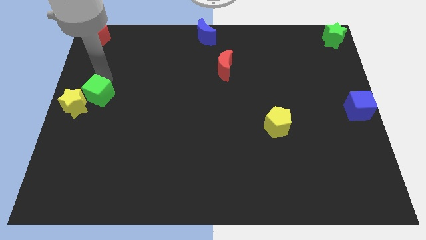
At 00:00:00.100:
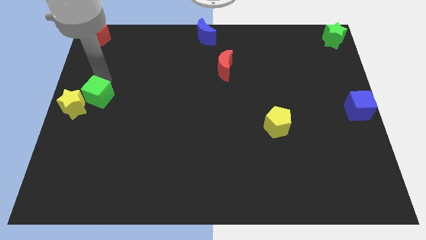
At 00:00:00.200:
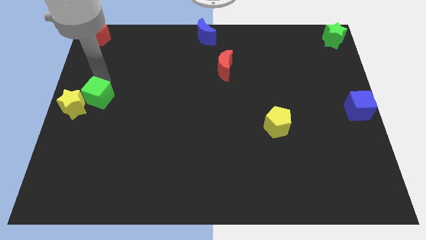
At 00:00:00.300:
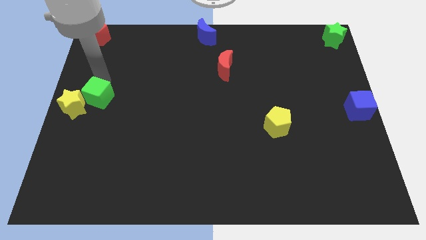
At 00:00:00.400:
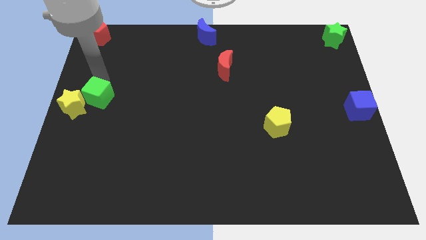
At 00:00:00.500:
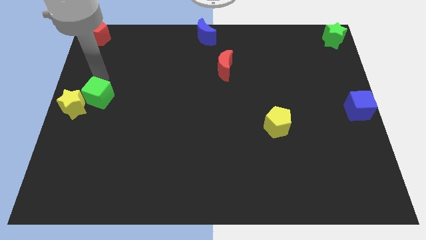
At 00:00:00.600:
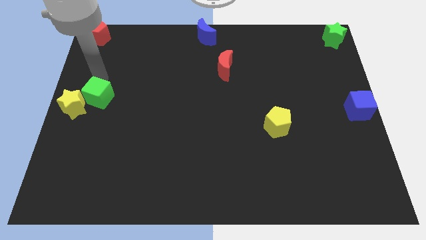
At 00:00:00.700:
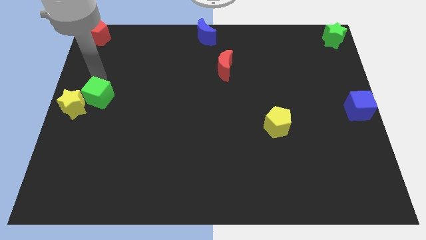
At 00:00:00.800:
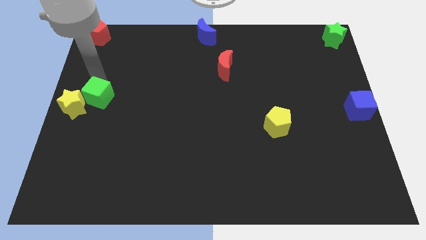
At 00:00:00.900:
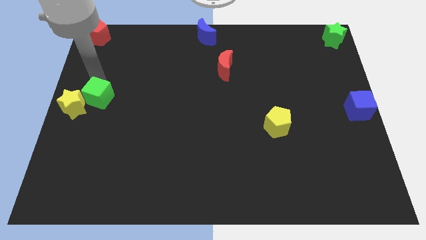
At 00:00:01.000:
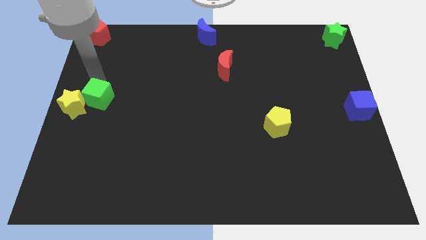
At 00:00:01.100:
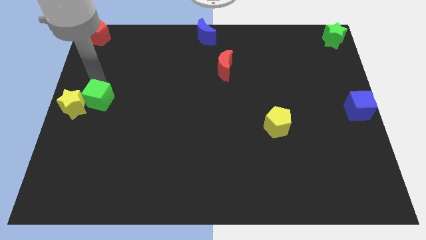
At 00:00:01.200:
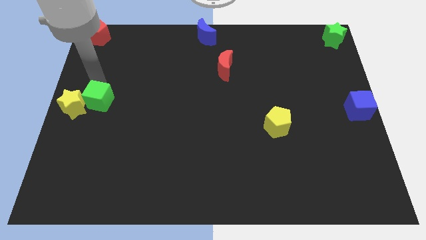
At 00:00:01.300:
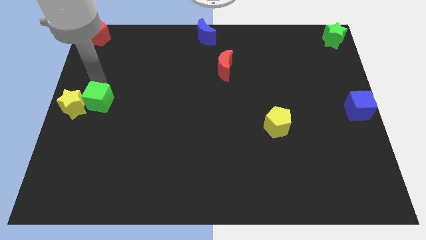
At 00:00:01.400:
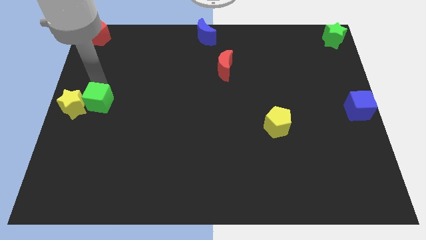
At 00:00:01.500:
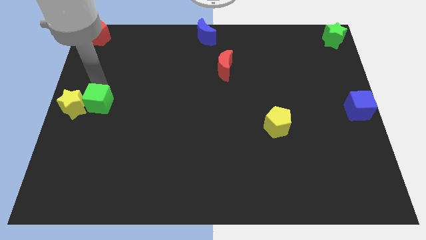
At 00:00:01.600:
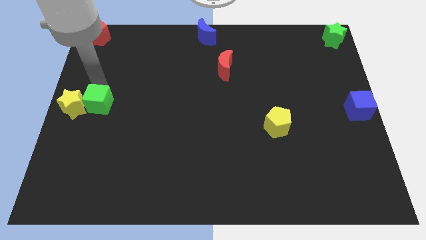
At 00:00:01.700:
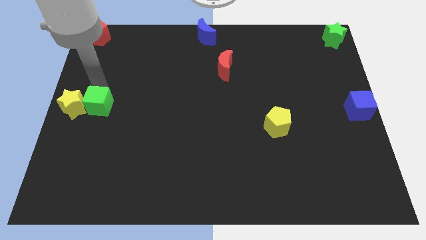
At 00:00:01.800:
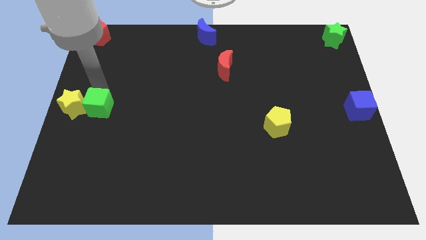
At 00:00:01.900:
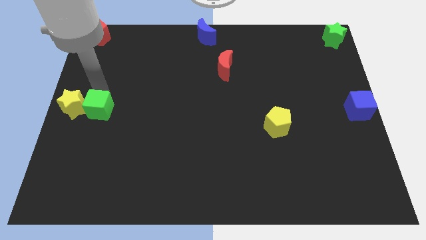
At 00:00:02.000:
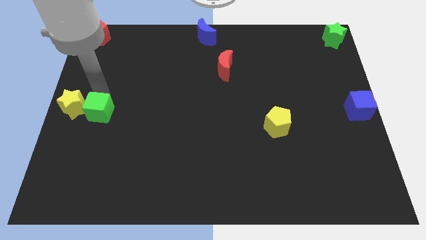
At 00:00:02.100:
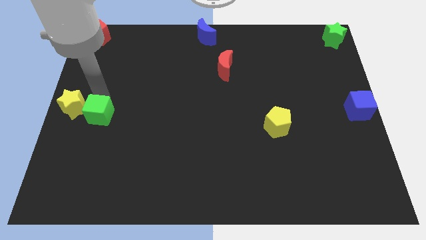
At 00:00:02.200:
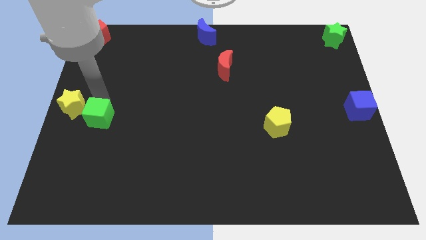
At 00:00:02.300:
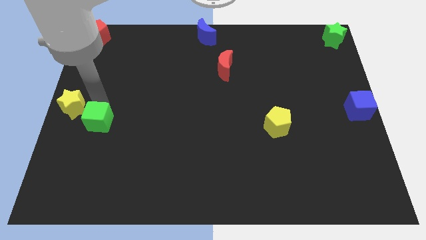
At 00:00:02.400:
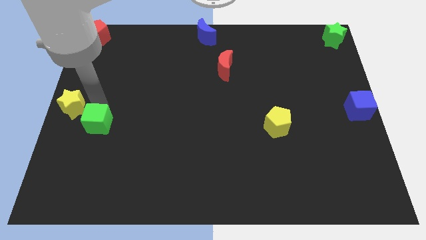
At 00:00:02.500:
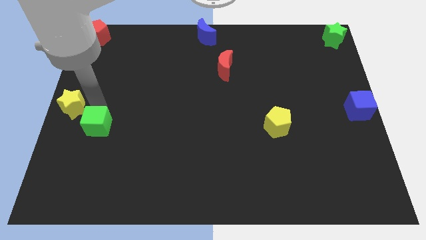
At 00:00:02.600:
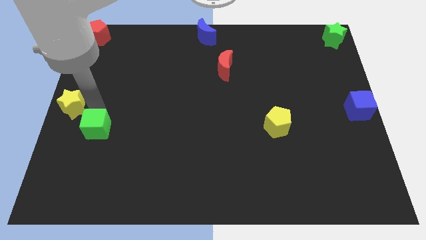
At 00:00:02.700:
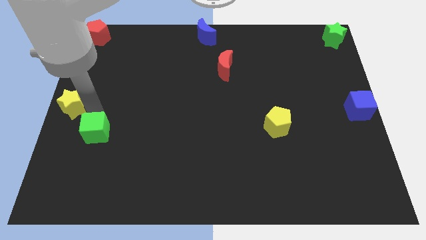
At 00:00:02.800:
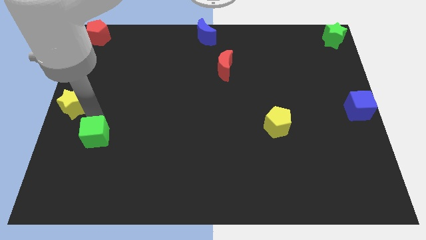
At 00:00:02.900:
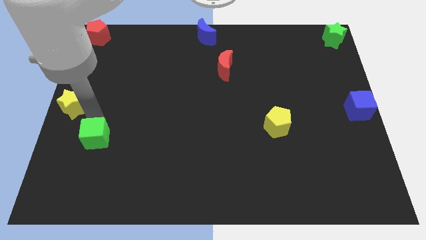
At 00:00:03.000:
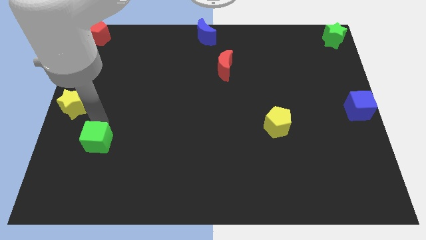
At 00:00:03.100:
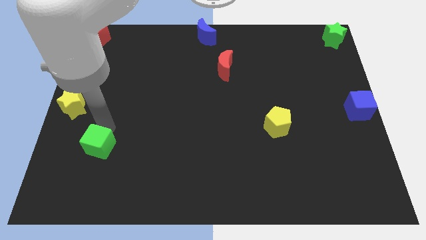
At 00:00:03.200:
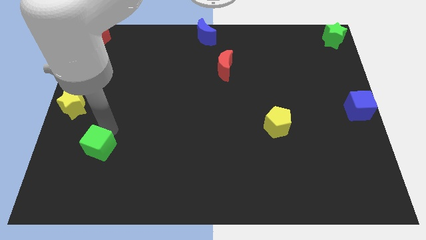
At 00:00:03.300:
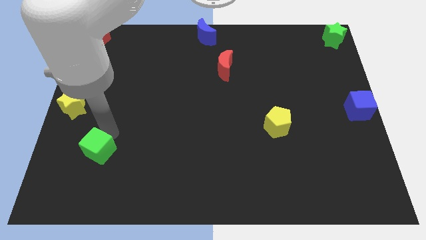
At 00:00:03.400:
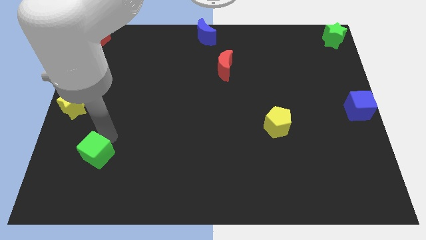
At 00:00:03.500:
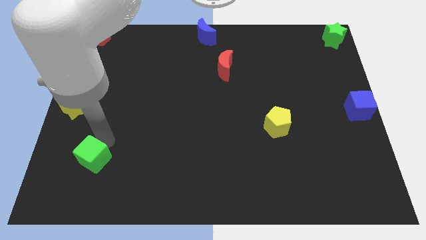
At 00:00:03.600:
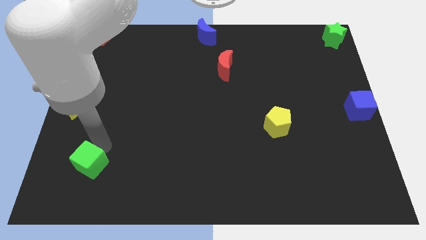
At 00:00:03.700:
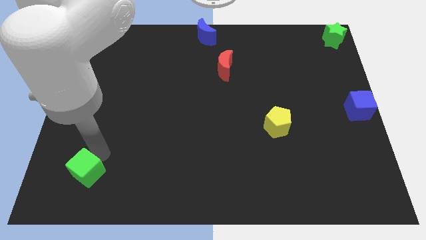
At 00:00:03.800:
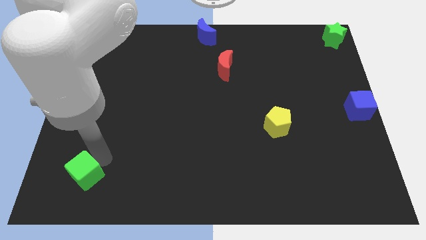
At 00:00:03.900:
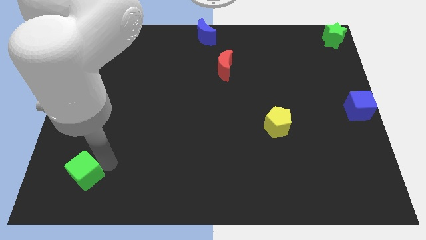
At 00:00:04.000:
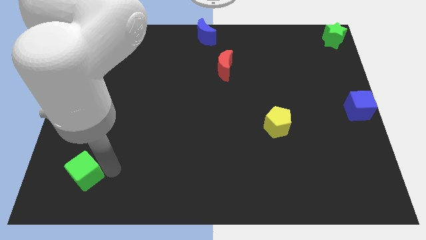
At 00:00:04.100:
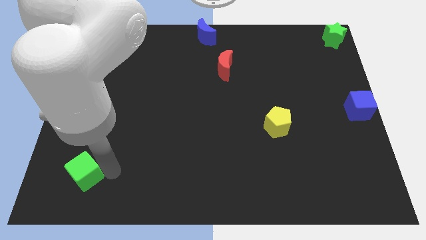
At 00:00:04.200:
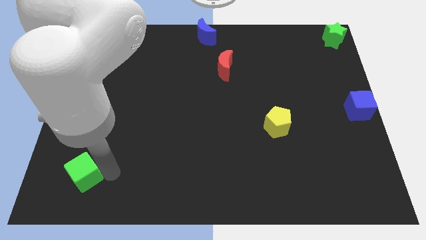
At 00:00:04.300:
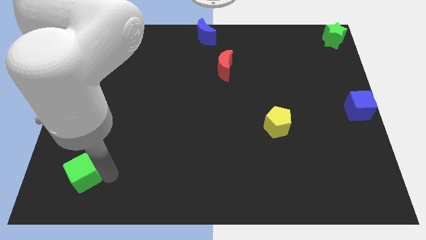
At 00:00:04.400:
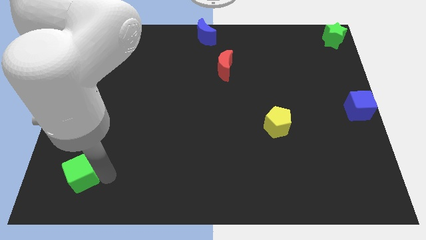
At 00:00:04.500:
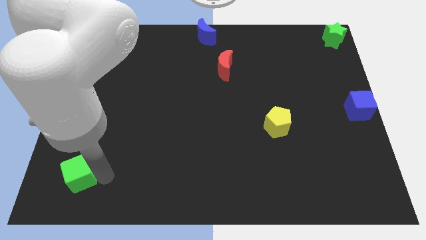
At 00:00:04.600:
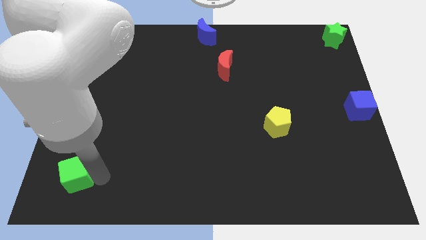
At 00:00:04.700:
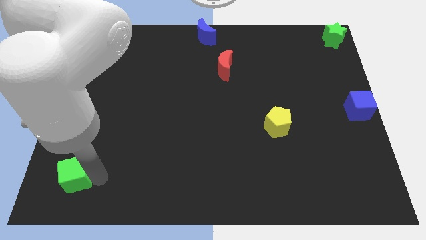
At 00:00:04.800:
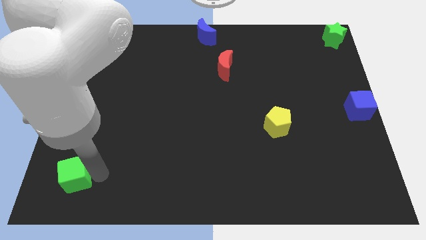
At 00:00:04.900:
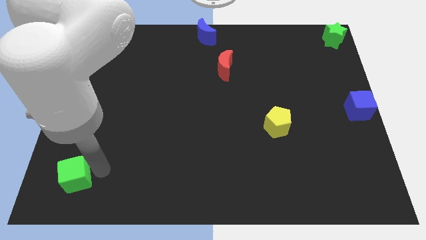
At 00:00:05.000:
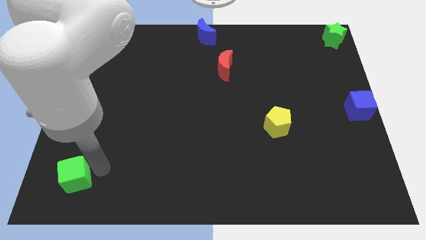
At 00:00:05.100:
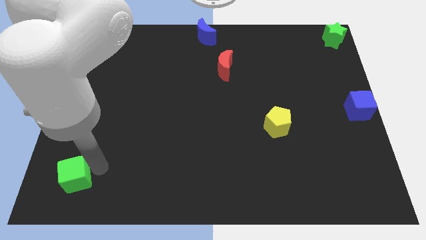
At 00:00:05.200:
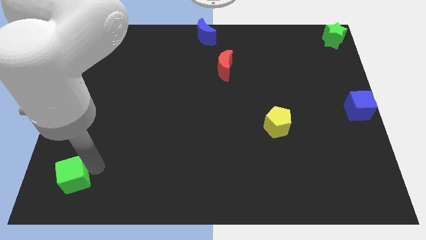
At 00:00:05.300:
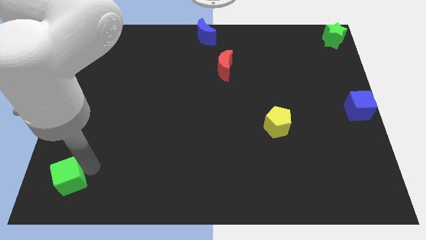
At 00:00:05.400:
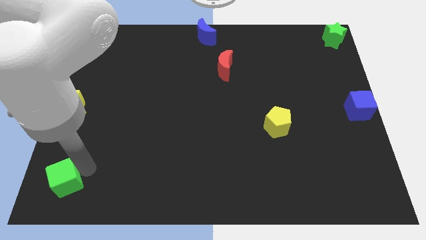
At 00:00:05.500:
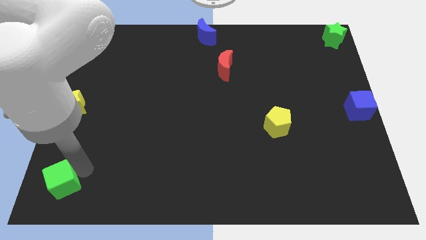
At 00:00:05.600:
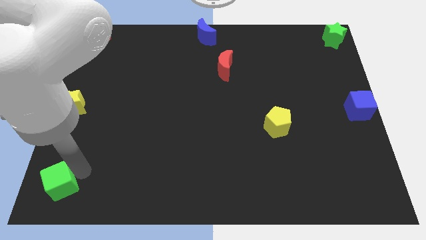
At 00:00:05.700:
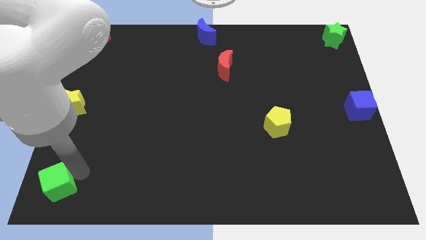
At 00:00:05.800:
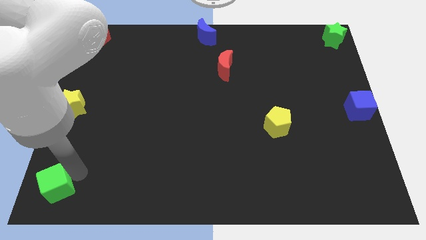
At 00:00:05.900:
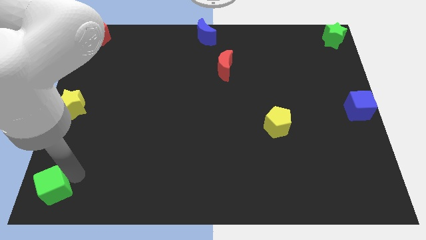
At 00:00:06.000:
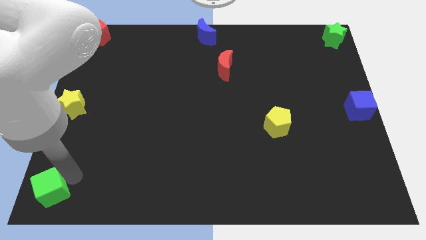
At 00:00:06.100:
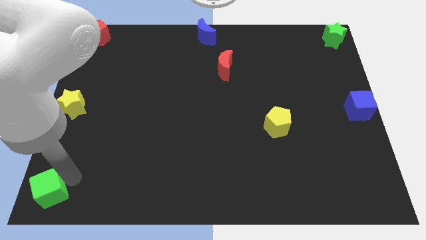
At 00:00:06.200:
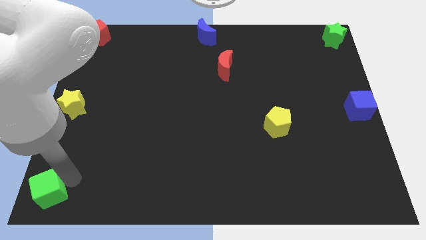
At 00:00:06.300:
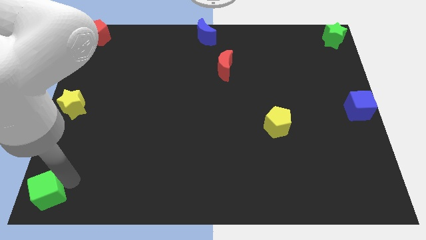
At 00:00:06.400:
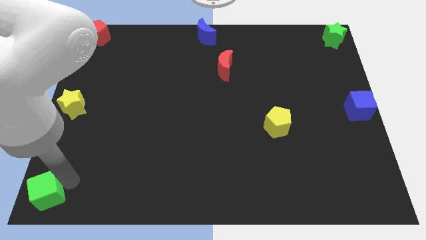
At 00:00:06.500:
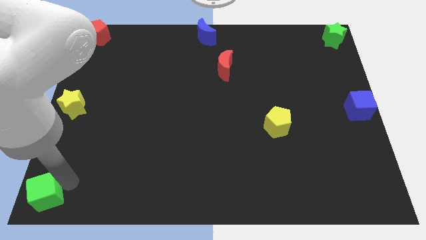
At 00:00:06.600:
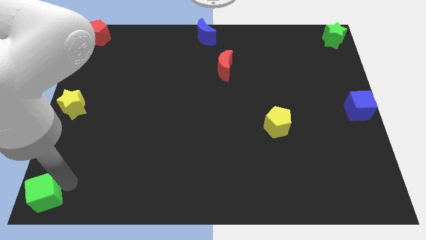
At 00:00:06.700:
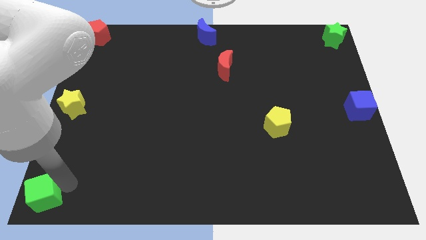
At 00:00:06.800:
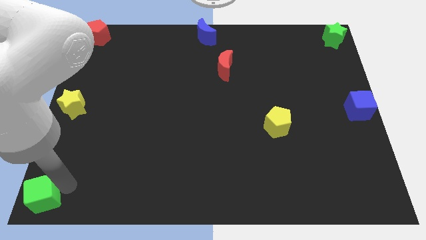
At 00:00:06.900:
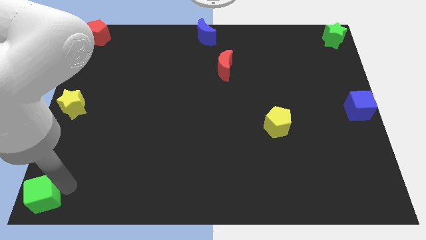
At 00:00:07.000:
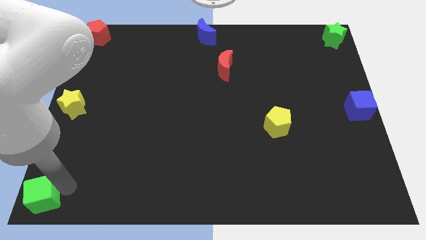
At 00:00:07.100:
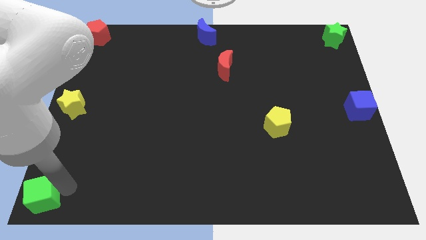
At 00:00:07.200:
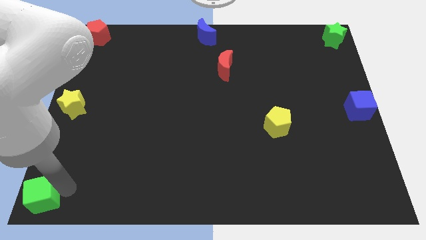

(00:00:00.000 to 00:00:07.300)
move the green cube to the bottom left bottom on the board

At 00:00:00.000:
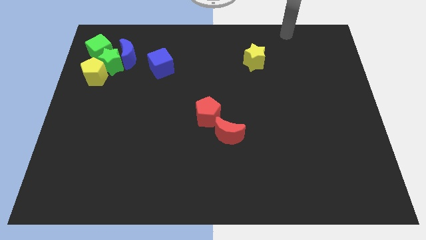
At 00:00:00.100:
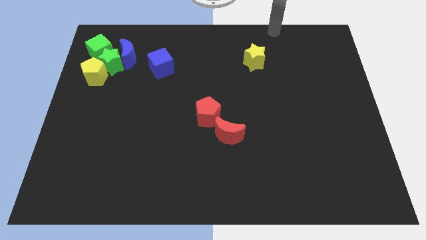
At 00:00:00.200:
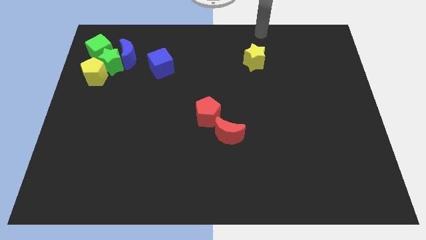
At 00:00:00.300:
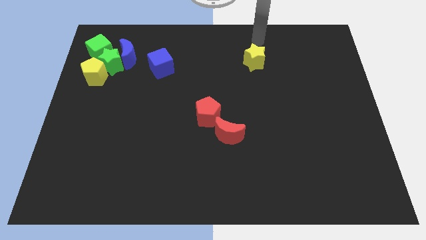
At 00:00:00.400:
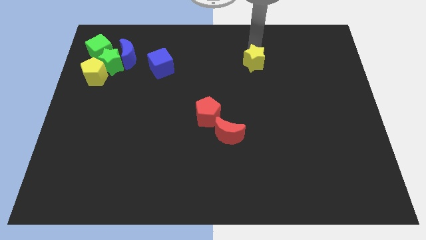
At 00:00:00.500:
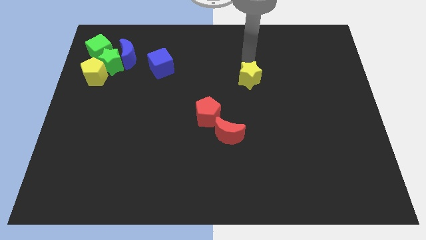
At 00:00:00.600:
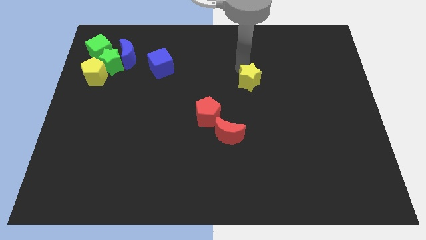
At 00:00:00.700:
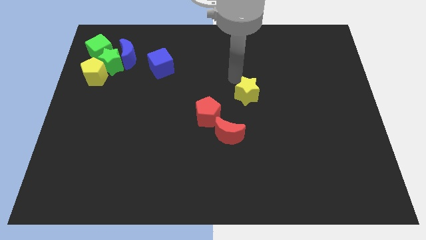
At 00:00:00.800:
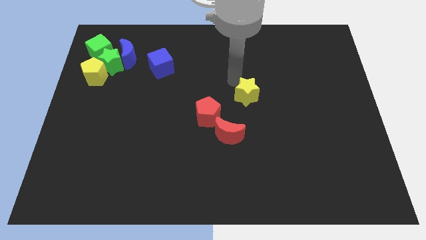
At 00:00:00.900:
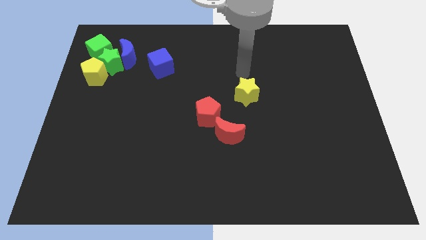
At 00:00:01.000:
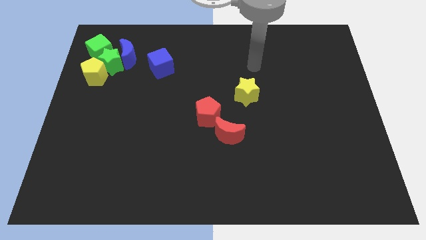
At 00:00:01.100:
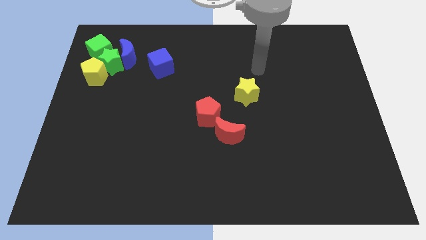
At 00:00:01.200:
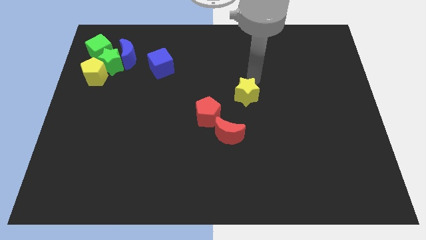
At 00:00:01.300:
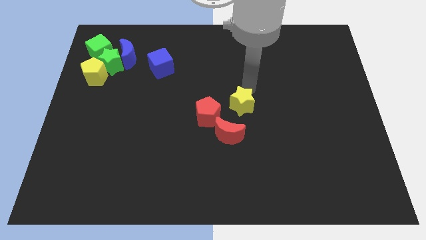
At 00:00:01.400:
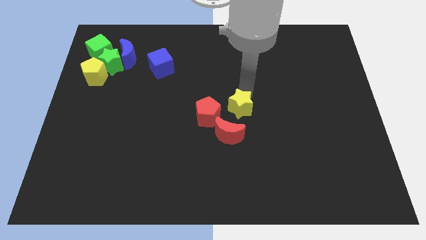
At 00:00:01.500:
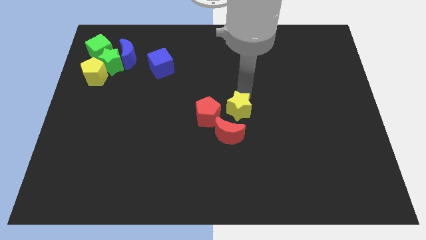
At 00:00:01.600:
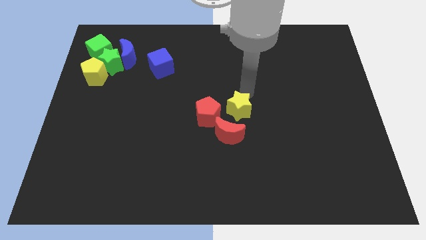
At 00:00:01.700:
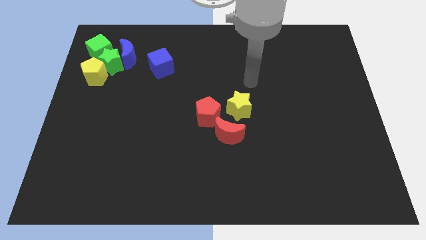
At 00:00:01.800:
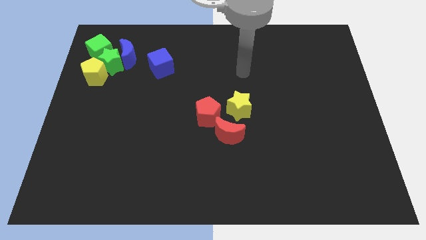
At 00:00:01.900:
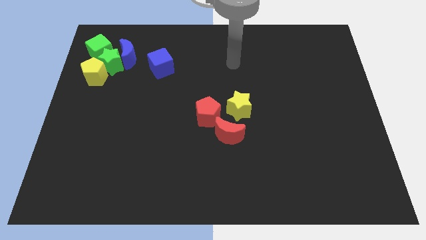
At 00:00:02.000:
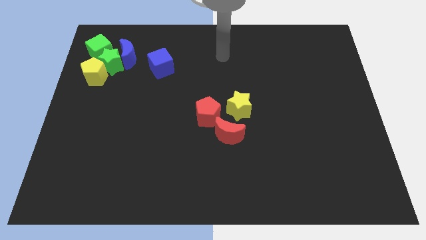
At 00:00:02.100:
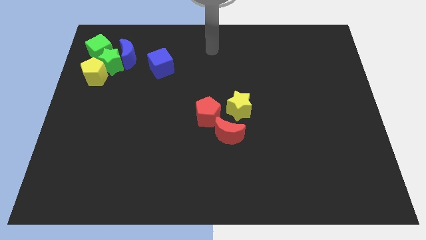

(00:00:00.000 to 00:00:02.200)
move the yellow star close to the red crescent
